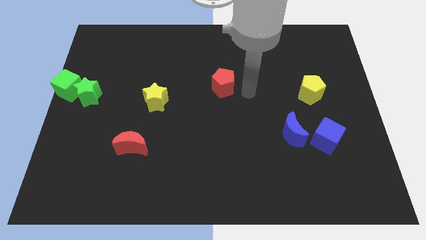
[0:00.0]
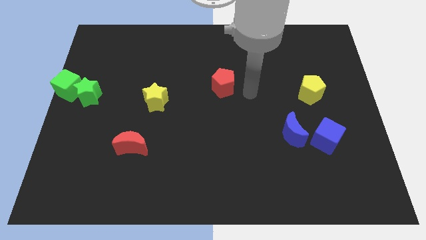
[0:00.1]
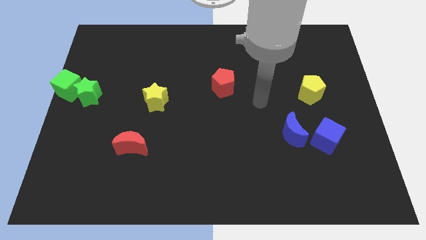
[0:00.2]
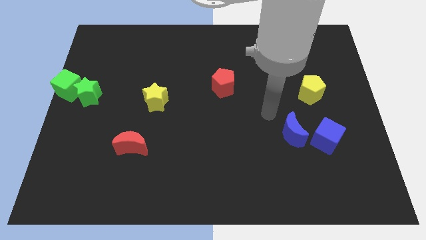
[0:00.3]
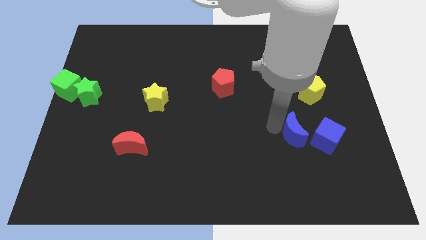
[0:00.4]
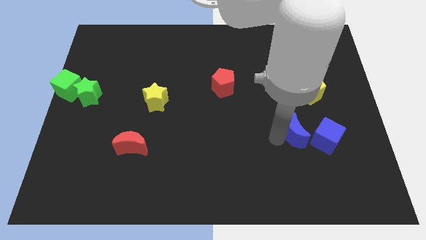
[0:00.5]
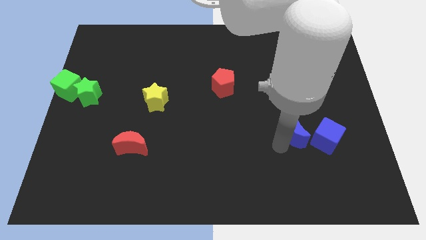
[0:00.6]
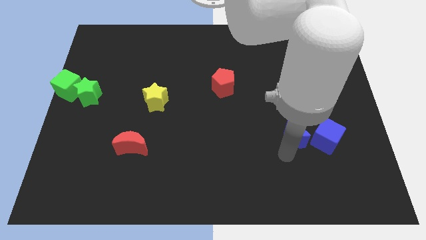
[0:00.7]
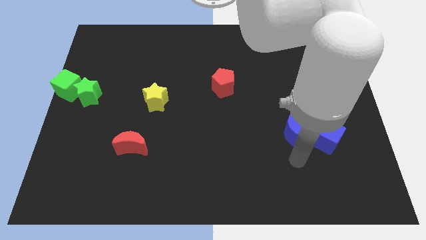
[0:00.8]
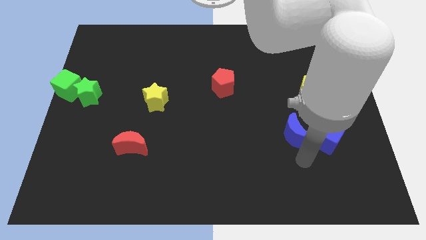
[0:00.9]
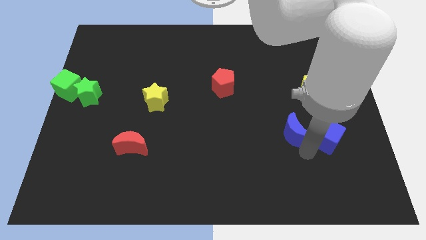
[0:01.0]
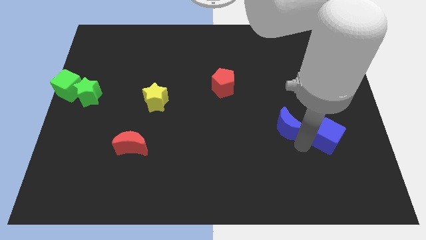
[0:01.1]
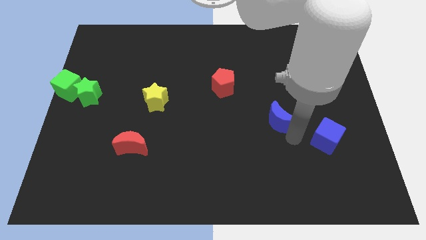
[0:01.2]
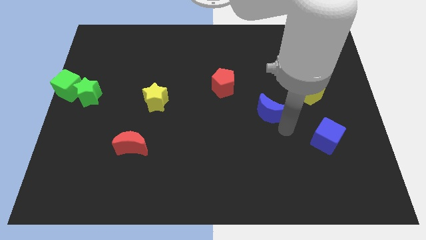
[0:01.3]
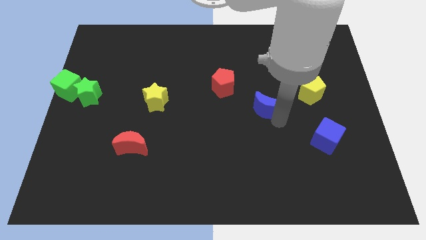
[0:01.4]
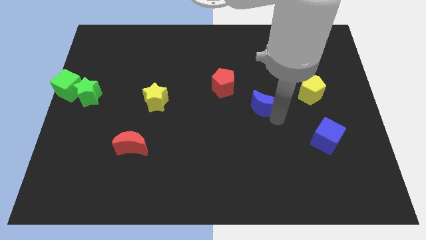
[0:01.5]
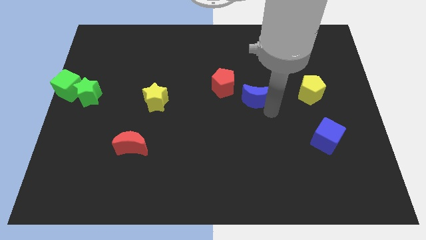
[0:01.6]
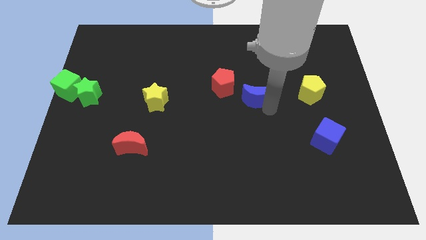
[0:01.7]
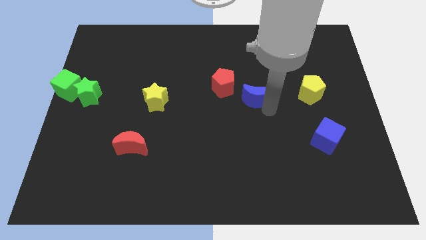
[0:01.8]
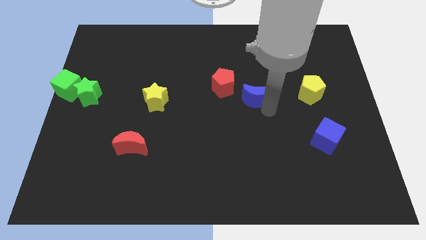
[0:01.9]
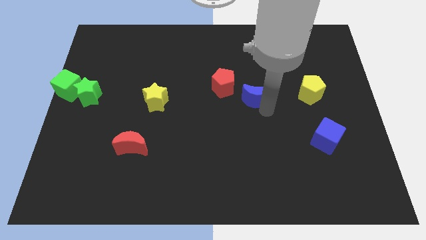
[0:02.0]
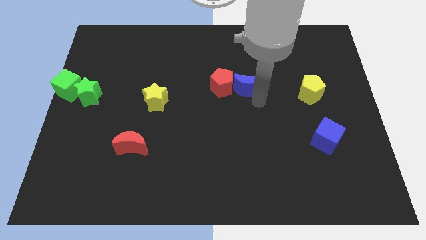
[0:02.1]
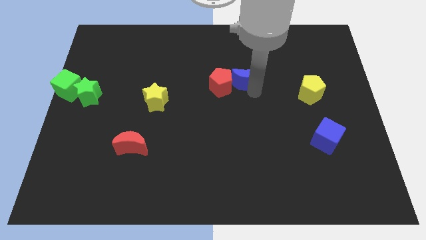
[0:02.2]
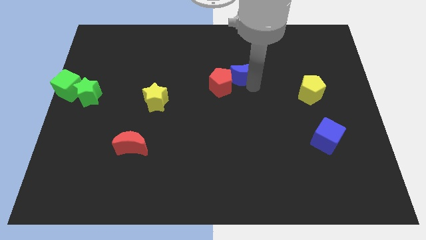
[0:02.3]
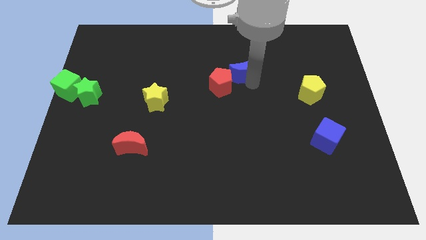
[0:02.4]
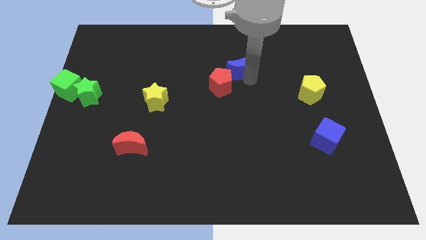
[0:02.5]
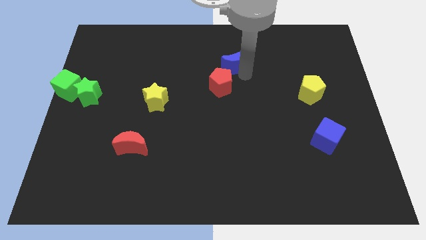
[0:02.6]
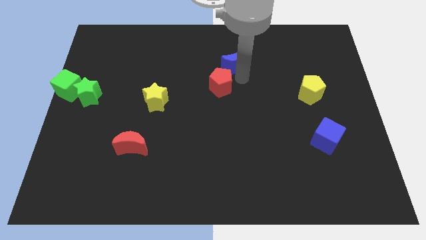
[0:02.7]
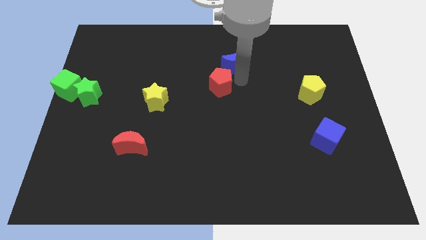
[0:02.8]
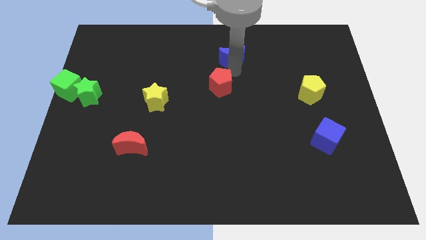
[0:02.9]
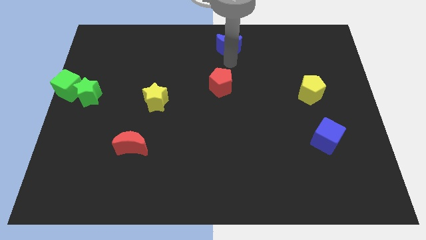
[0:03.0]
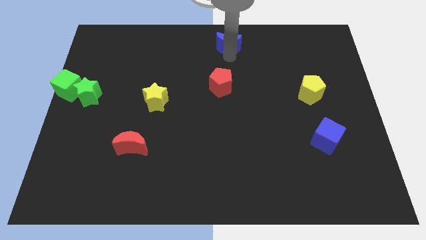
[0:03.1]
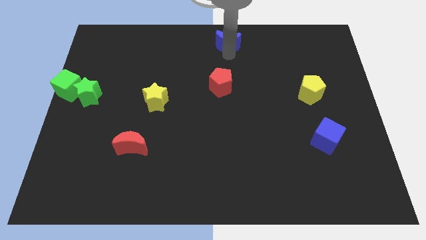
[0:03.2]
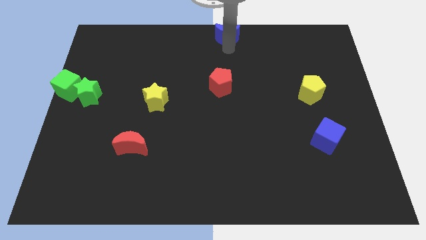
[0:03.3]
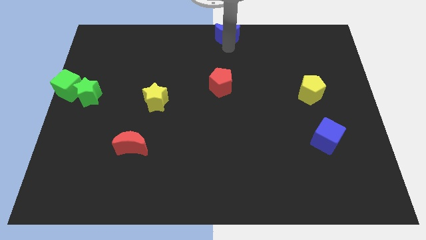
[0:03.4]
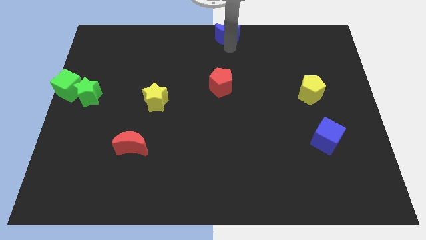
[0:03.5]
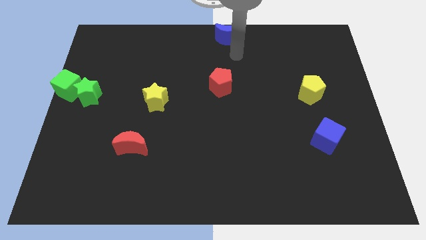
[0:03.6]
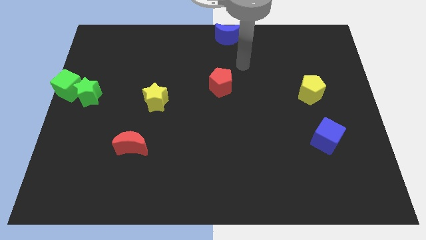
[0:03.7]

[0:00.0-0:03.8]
push the blue crescent away from the blue cube

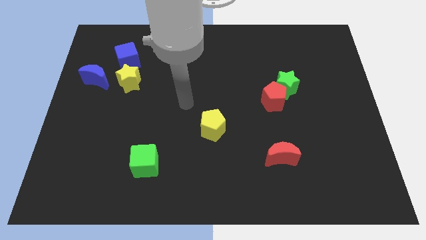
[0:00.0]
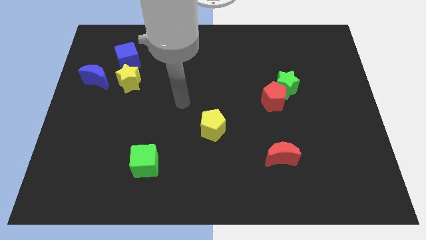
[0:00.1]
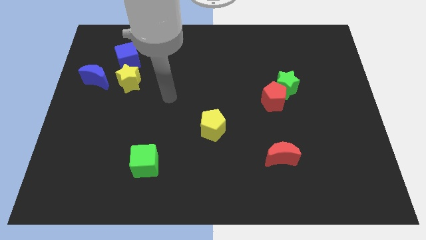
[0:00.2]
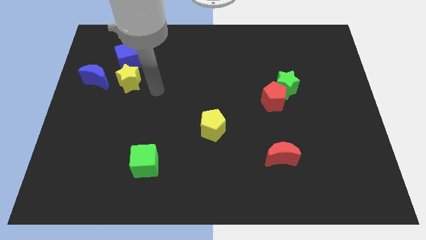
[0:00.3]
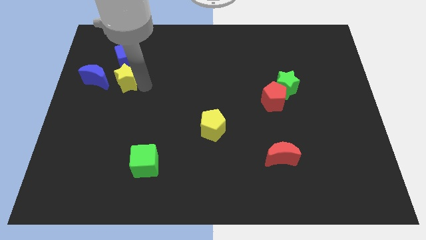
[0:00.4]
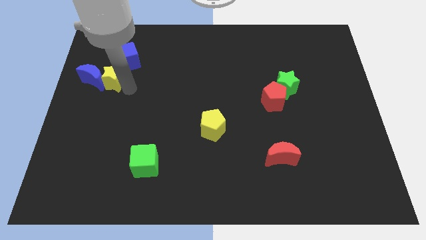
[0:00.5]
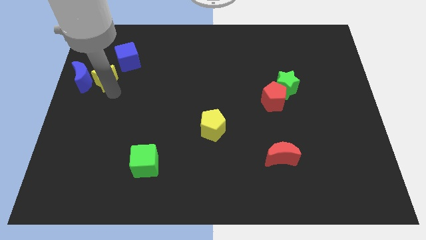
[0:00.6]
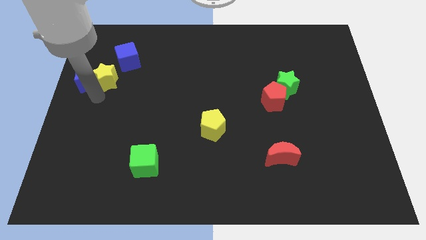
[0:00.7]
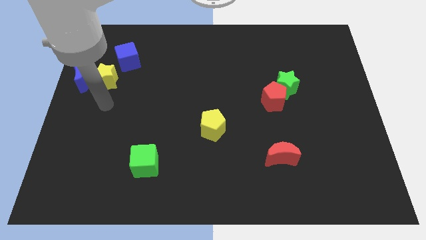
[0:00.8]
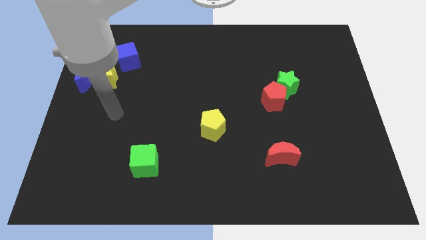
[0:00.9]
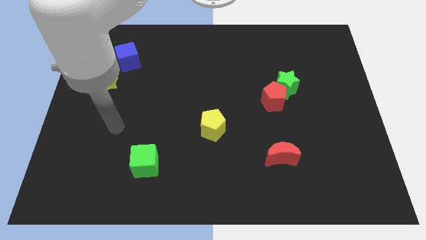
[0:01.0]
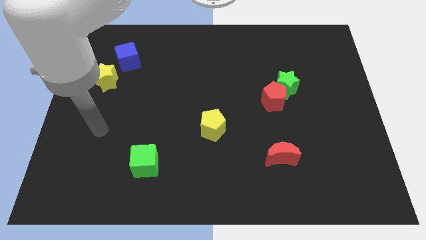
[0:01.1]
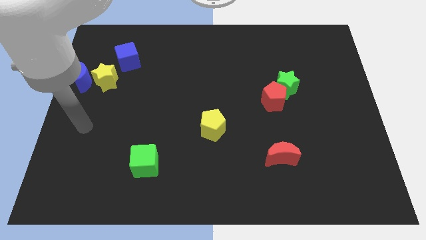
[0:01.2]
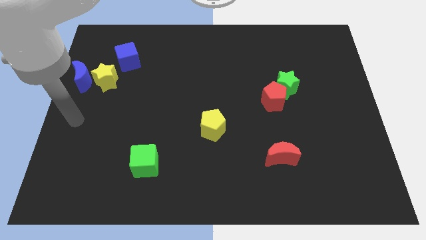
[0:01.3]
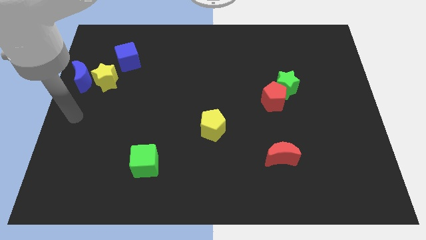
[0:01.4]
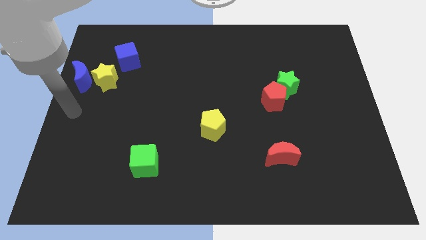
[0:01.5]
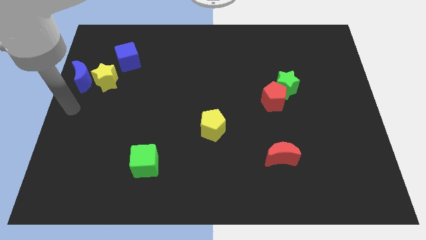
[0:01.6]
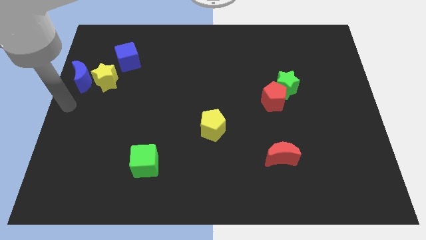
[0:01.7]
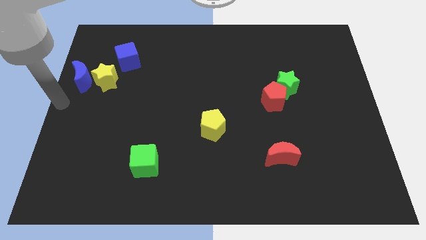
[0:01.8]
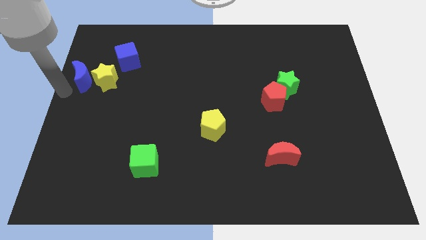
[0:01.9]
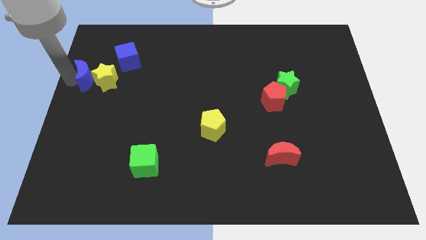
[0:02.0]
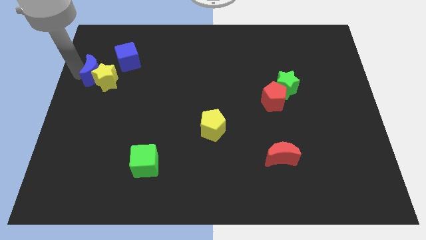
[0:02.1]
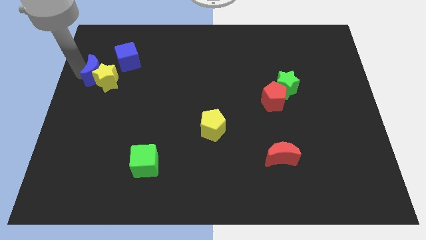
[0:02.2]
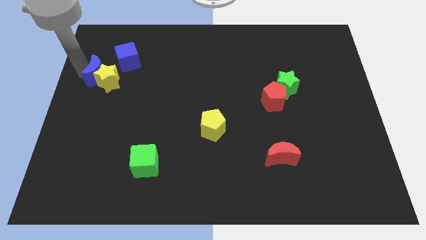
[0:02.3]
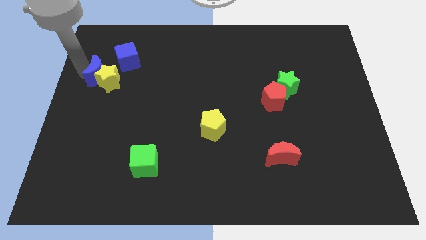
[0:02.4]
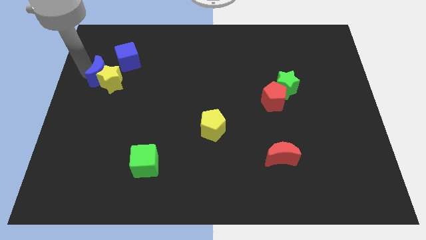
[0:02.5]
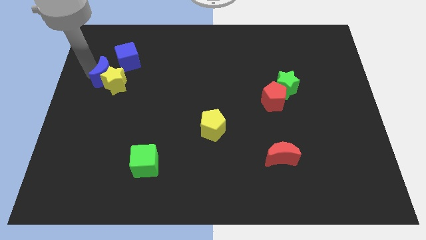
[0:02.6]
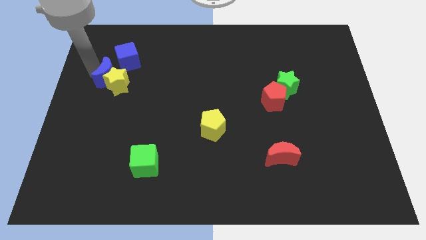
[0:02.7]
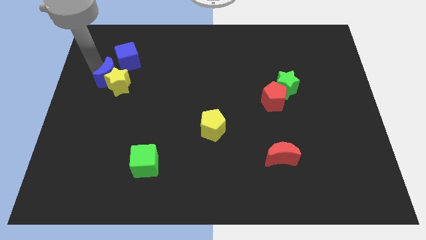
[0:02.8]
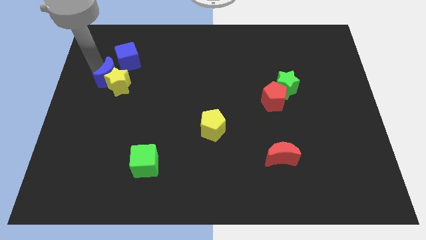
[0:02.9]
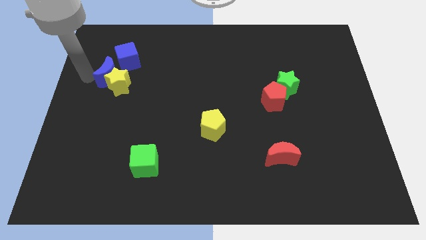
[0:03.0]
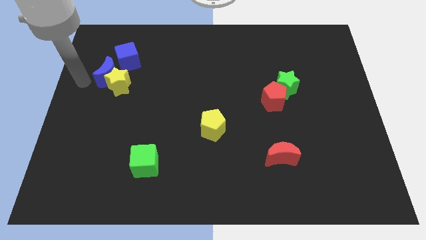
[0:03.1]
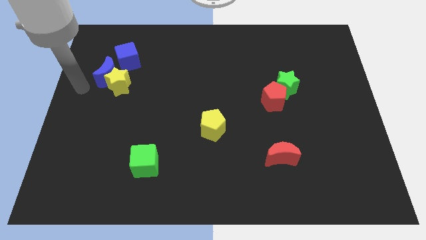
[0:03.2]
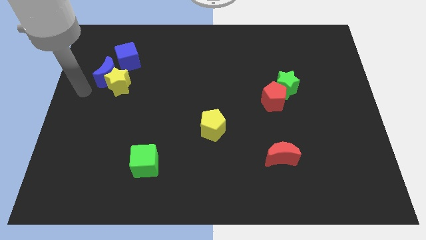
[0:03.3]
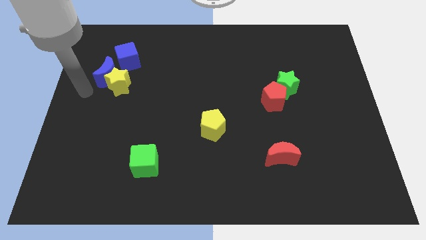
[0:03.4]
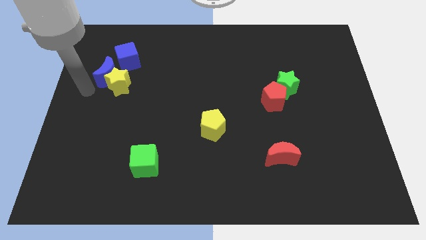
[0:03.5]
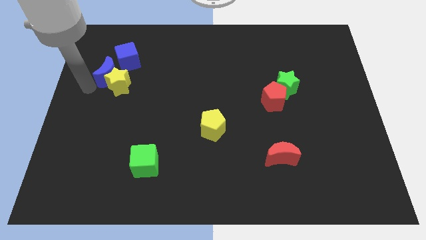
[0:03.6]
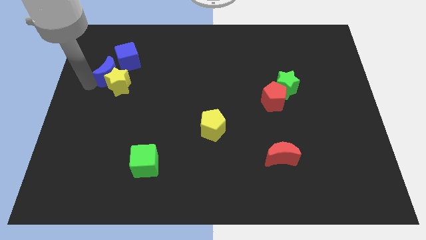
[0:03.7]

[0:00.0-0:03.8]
place the blue moon diagonally to the bottom left of the blue cube

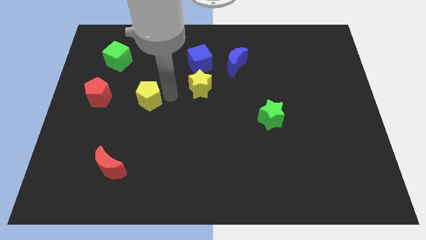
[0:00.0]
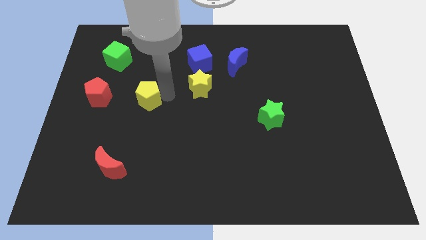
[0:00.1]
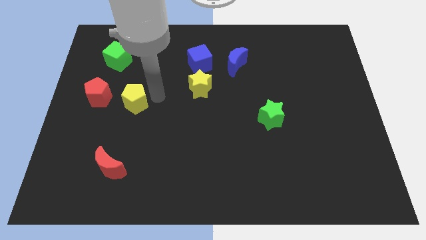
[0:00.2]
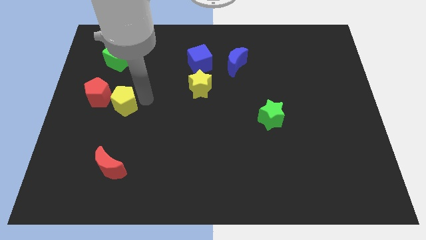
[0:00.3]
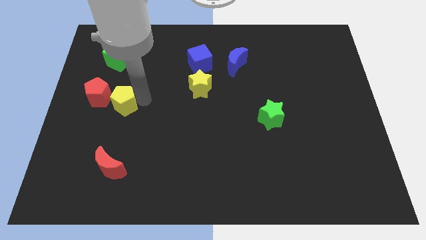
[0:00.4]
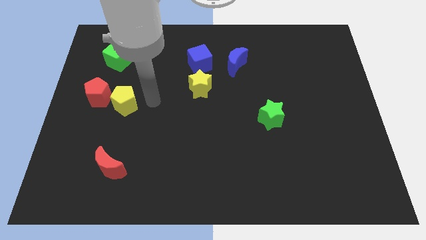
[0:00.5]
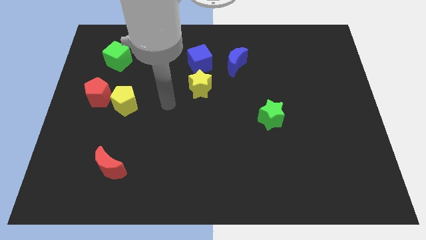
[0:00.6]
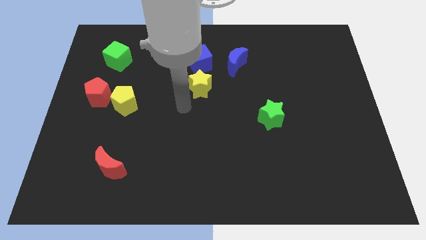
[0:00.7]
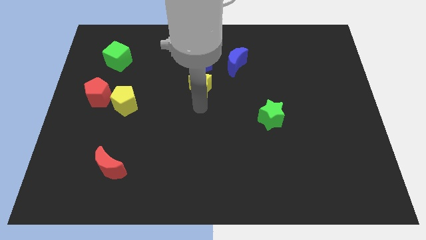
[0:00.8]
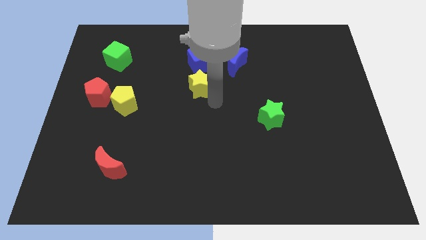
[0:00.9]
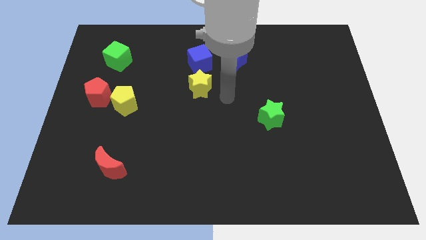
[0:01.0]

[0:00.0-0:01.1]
move the yellow pentagon slightly towards the red pentagon

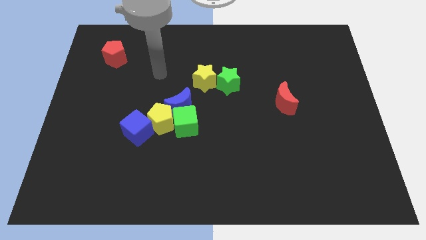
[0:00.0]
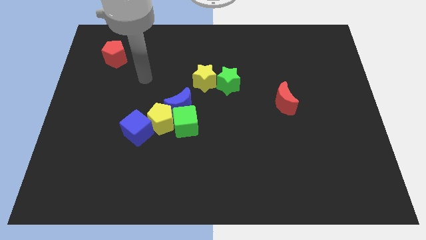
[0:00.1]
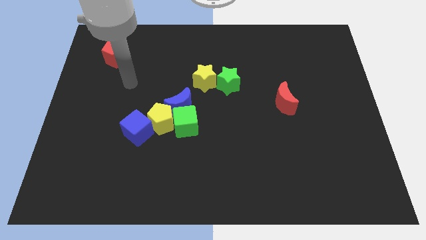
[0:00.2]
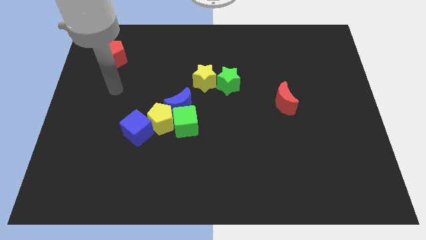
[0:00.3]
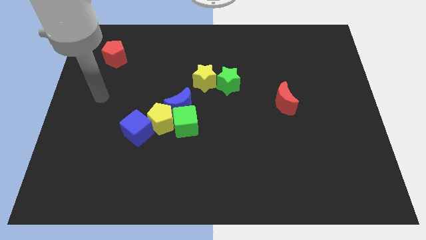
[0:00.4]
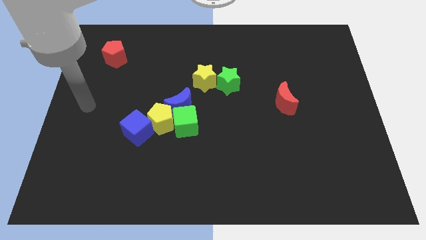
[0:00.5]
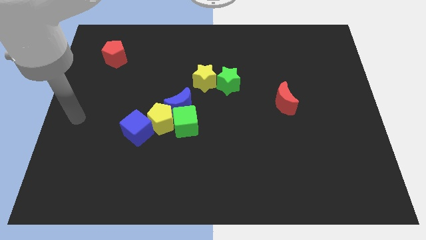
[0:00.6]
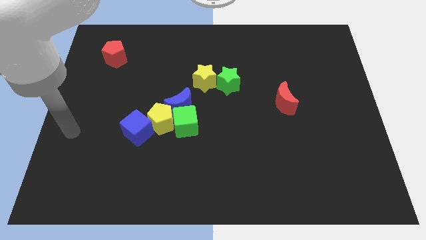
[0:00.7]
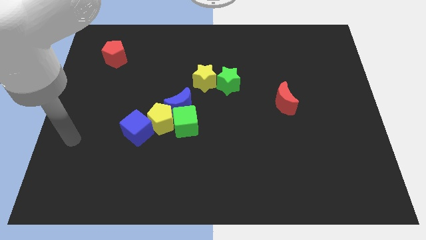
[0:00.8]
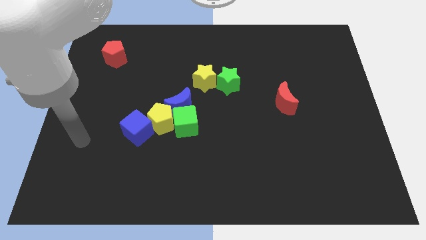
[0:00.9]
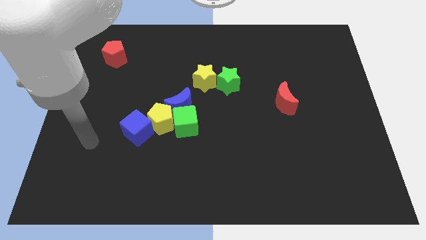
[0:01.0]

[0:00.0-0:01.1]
point your arm at the left side of the blue cube
